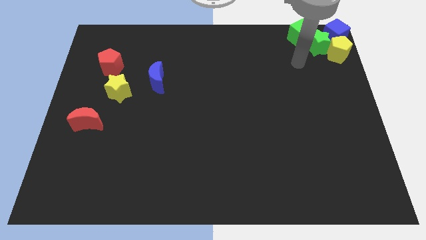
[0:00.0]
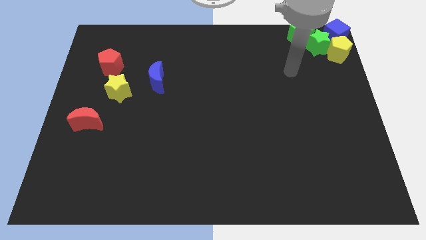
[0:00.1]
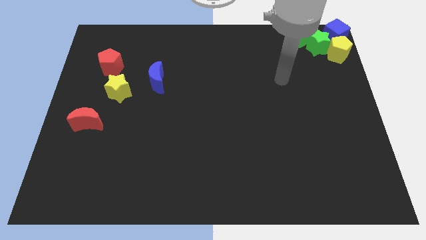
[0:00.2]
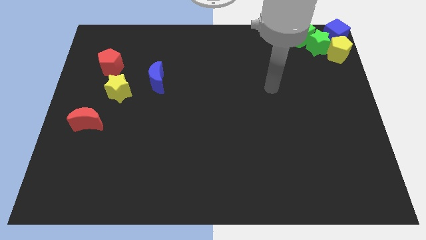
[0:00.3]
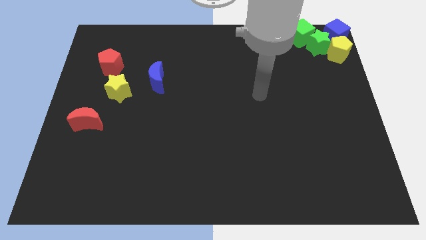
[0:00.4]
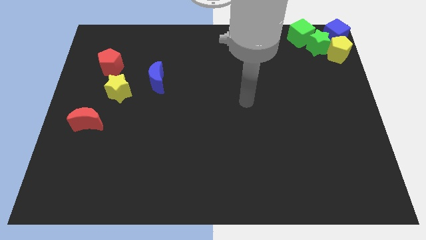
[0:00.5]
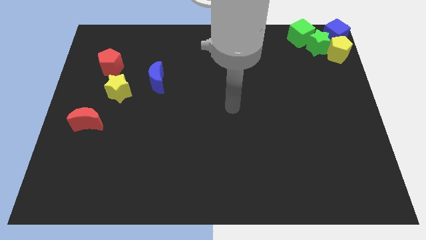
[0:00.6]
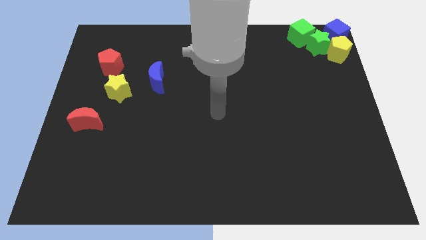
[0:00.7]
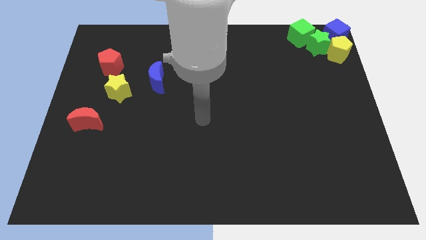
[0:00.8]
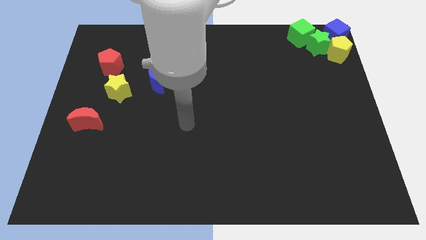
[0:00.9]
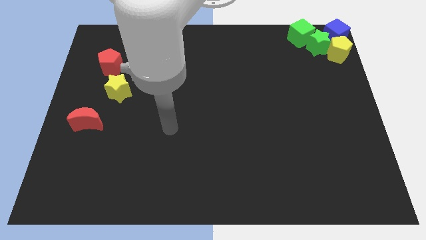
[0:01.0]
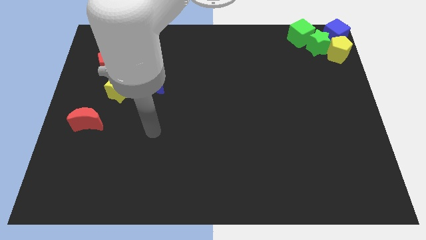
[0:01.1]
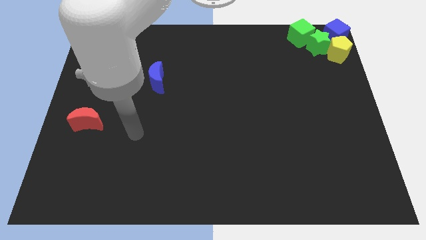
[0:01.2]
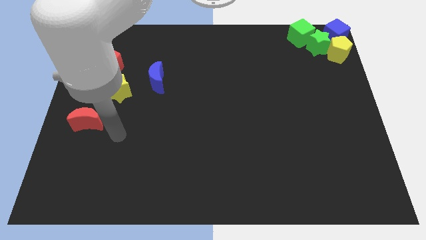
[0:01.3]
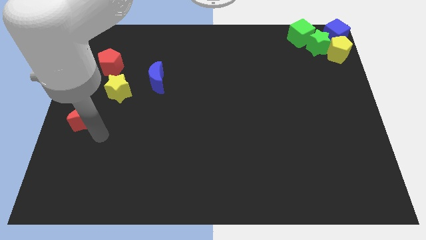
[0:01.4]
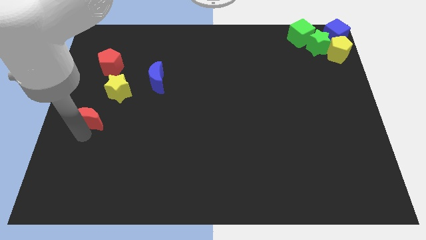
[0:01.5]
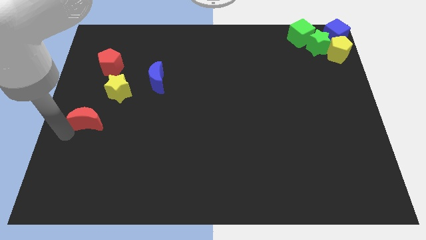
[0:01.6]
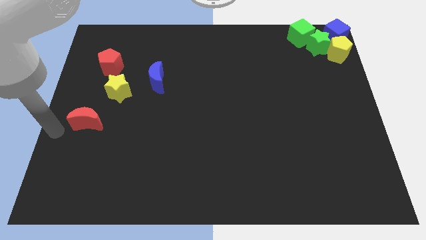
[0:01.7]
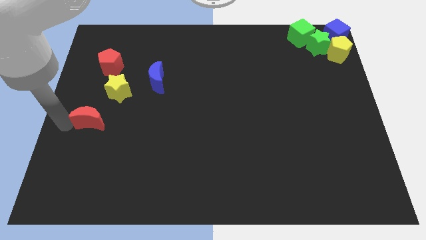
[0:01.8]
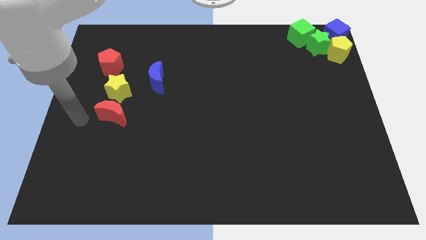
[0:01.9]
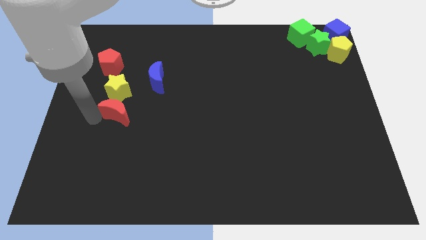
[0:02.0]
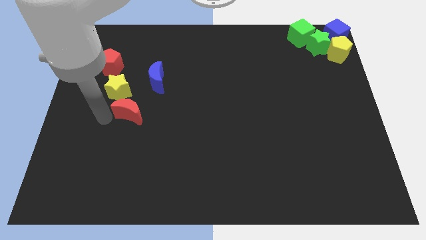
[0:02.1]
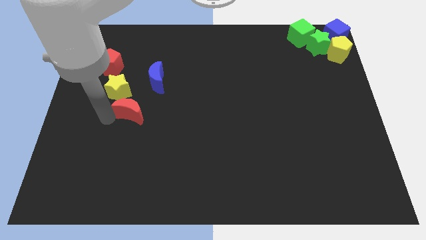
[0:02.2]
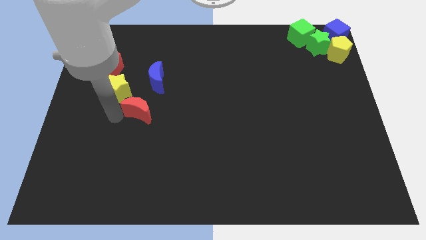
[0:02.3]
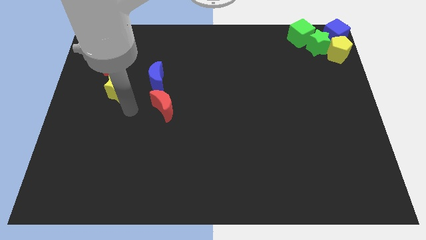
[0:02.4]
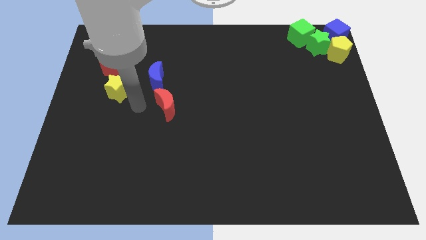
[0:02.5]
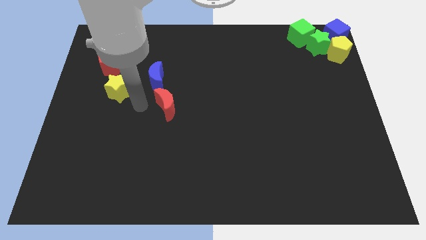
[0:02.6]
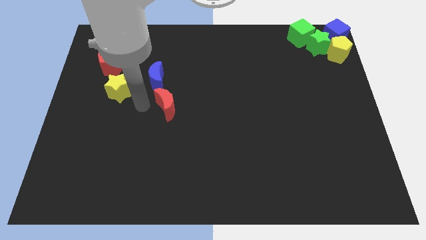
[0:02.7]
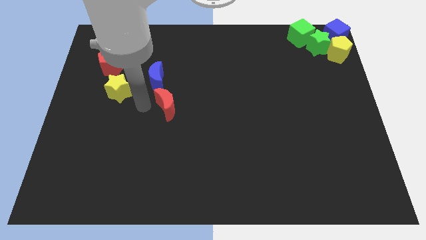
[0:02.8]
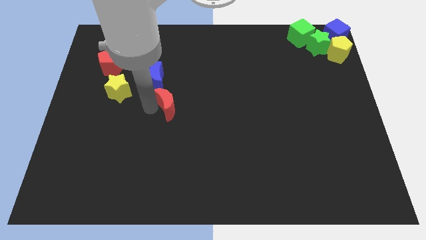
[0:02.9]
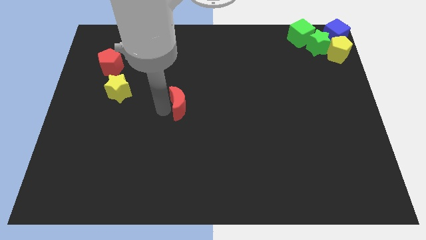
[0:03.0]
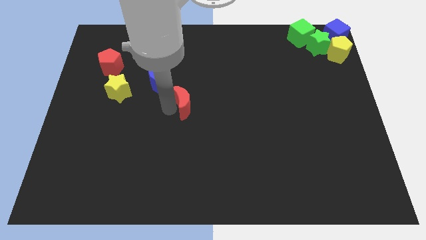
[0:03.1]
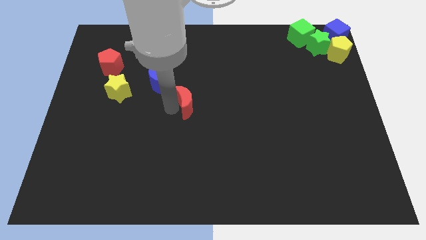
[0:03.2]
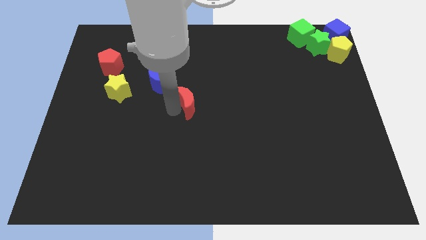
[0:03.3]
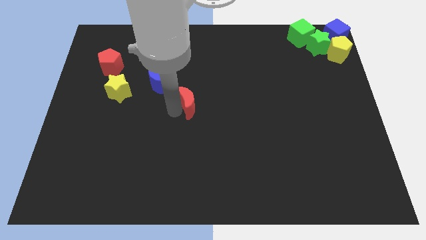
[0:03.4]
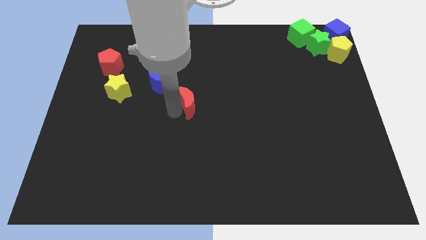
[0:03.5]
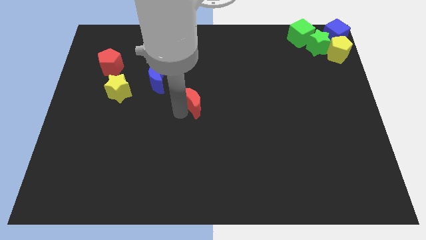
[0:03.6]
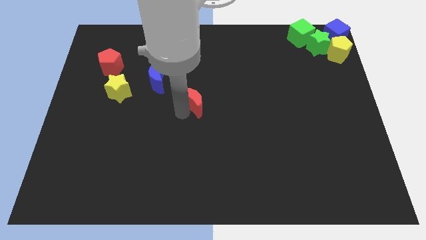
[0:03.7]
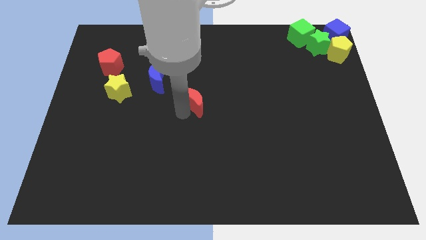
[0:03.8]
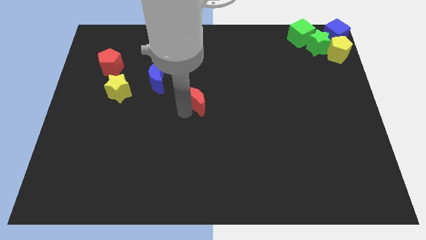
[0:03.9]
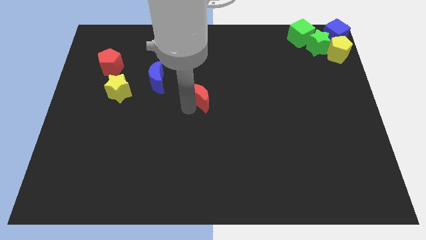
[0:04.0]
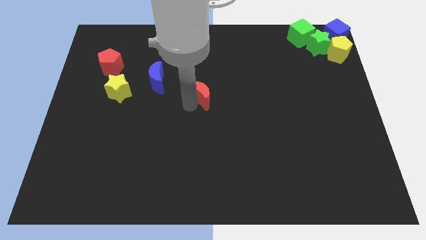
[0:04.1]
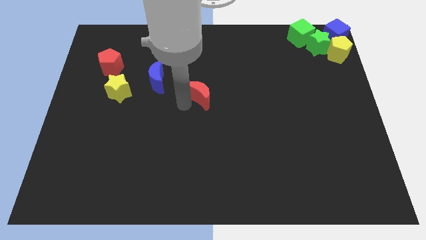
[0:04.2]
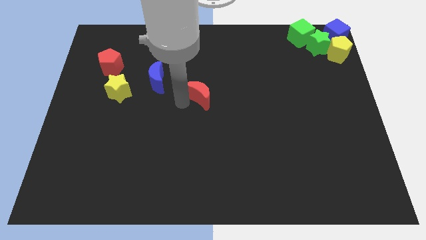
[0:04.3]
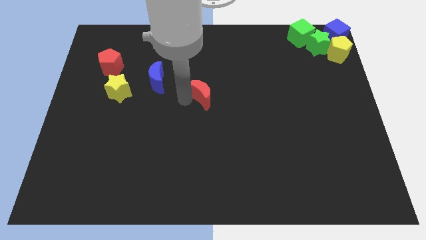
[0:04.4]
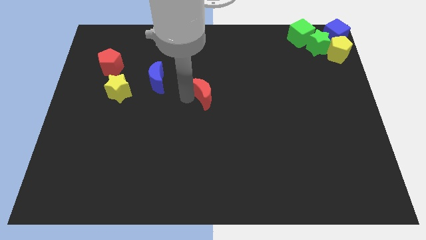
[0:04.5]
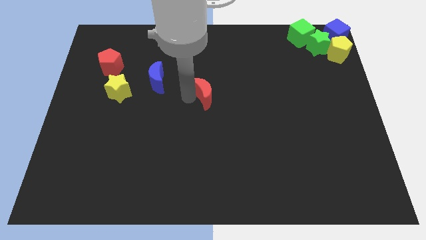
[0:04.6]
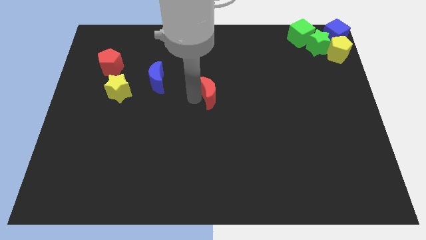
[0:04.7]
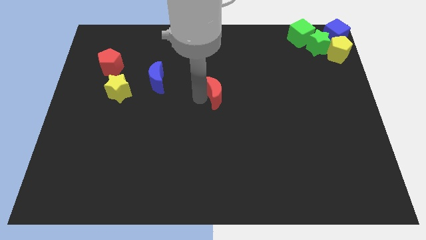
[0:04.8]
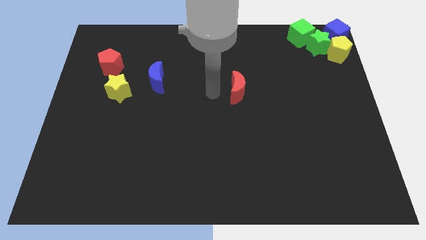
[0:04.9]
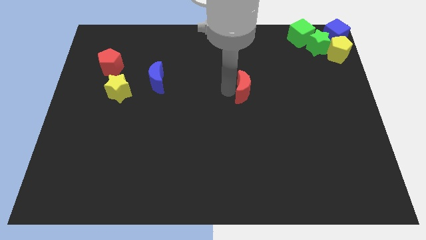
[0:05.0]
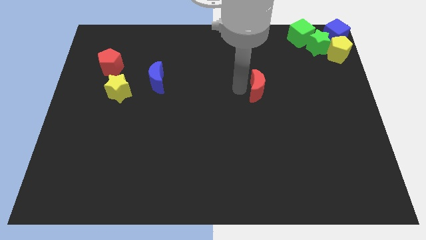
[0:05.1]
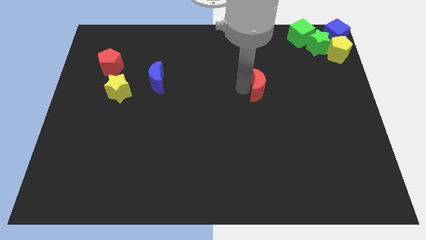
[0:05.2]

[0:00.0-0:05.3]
push the red crescent towards the right side

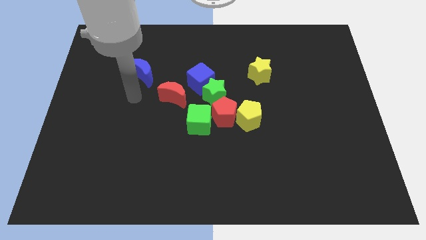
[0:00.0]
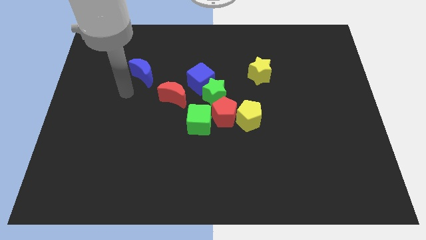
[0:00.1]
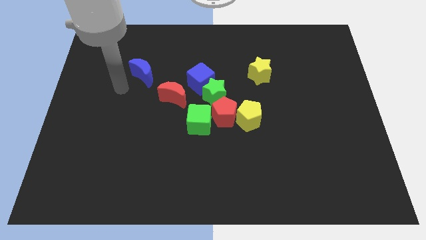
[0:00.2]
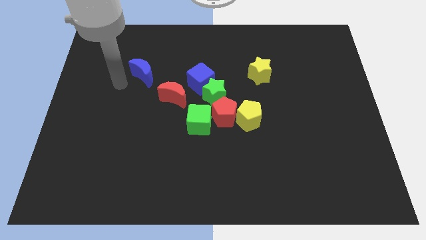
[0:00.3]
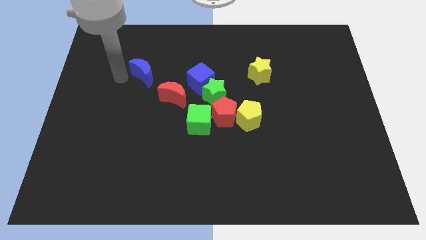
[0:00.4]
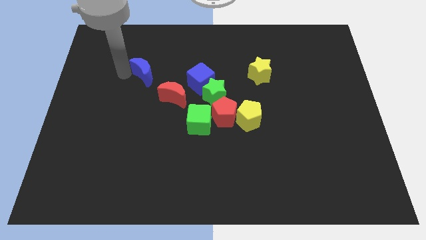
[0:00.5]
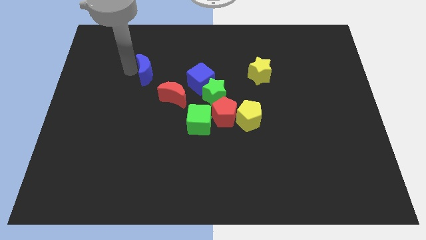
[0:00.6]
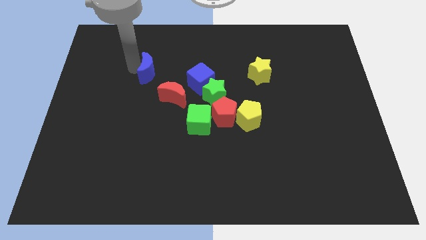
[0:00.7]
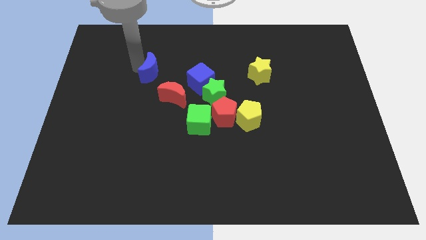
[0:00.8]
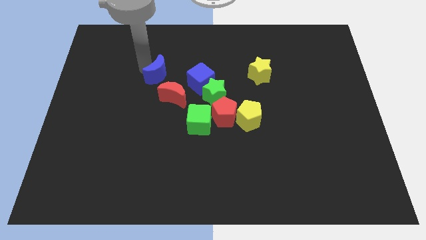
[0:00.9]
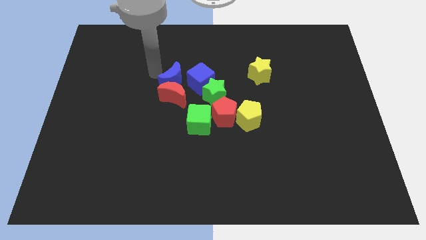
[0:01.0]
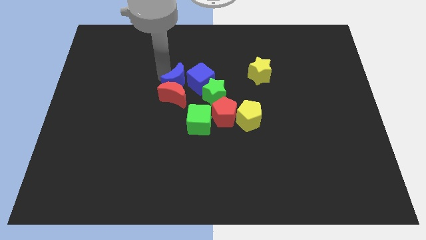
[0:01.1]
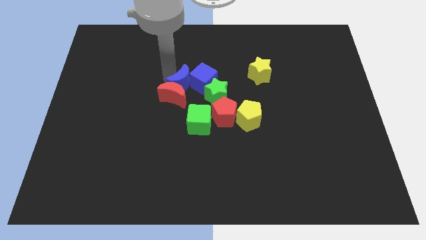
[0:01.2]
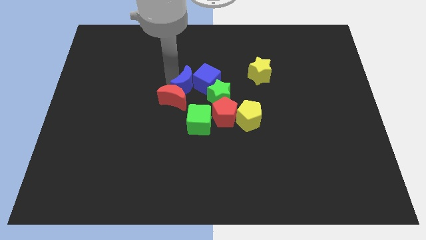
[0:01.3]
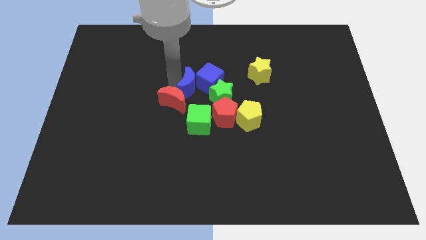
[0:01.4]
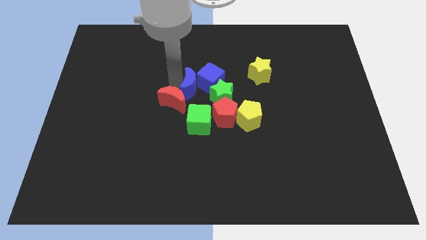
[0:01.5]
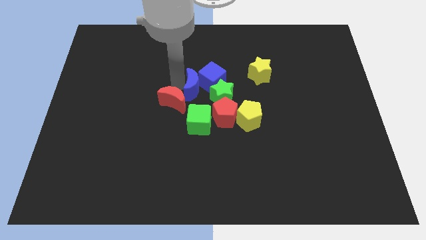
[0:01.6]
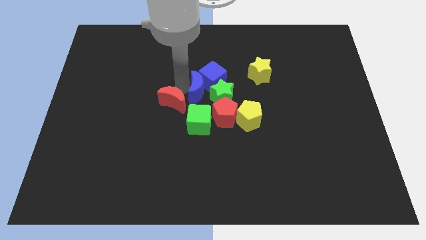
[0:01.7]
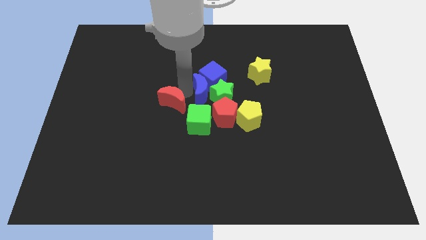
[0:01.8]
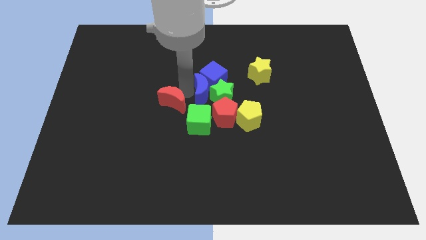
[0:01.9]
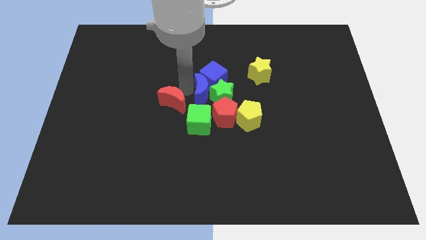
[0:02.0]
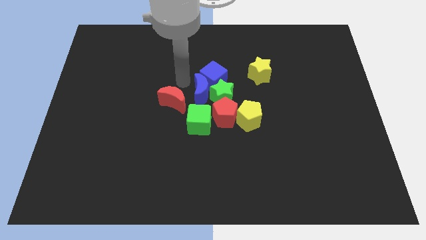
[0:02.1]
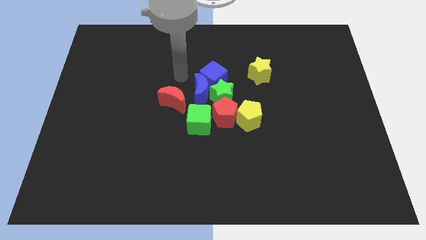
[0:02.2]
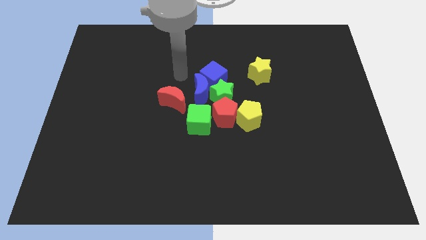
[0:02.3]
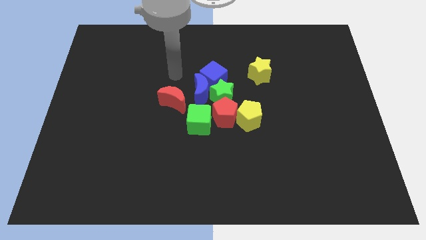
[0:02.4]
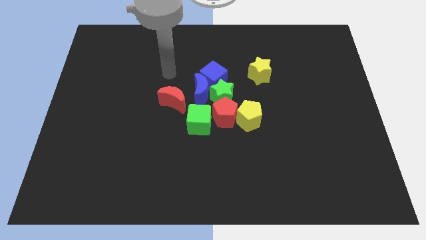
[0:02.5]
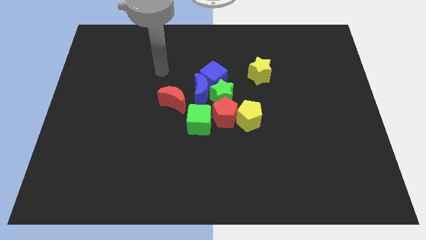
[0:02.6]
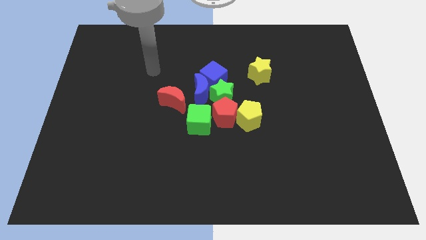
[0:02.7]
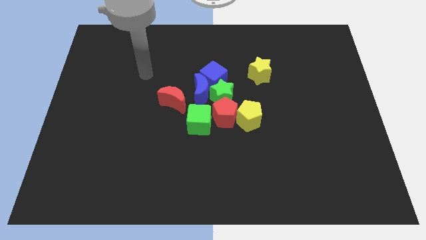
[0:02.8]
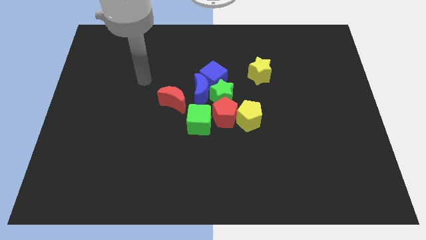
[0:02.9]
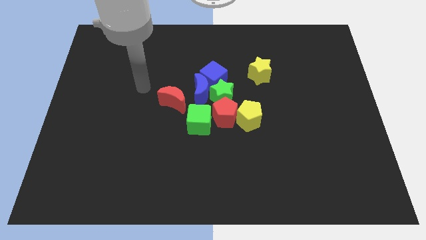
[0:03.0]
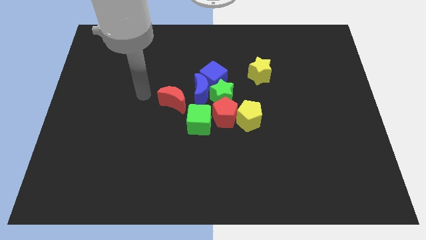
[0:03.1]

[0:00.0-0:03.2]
move blue moon left beside the green star

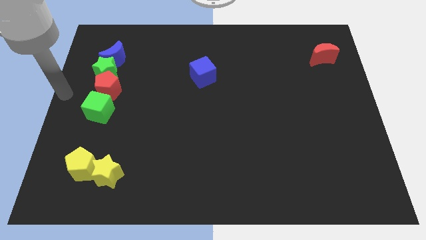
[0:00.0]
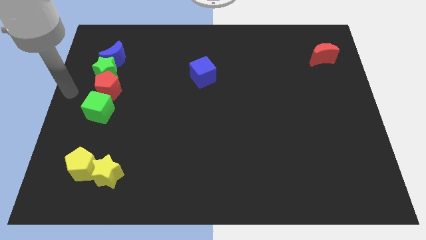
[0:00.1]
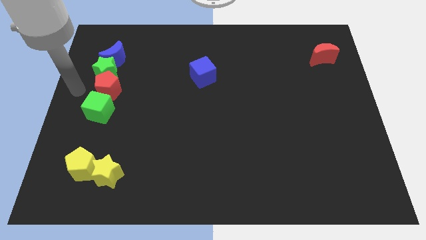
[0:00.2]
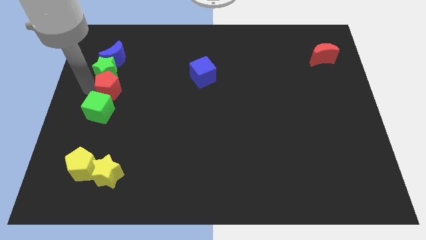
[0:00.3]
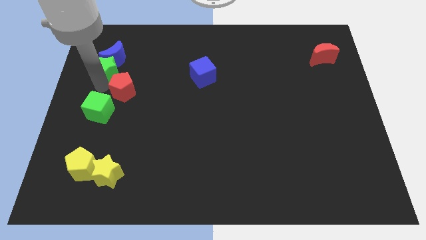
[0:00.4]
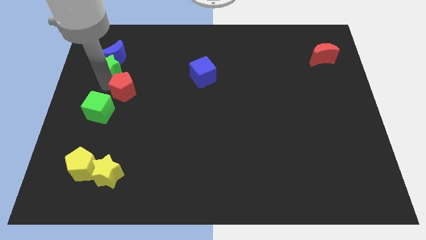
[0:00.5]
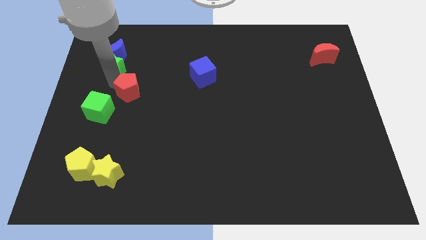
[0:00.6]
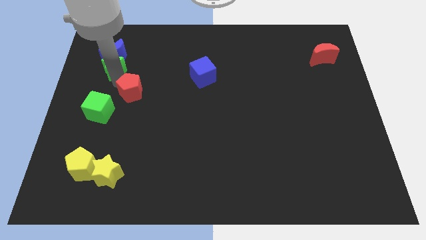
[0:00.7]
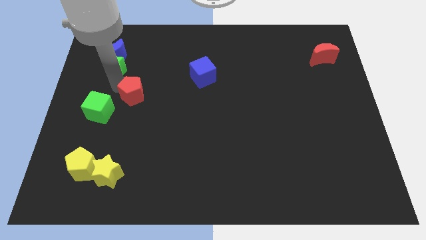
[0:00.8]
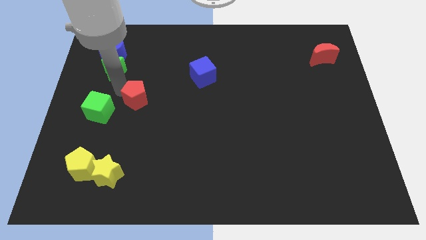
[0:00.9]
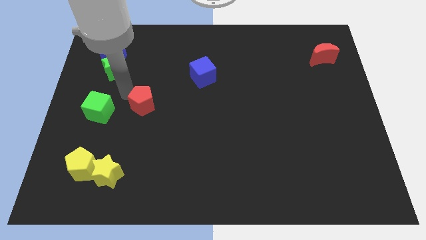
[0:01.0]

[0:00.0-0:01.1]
separate red pentagon from green cube
